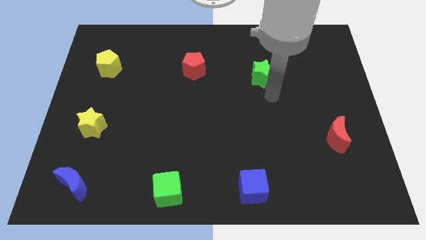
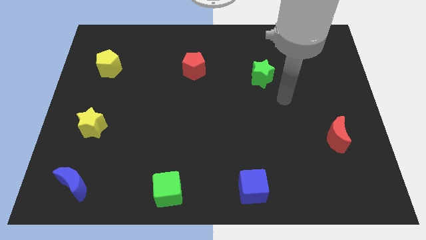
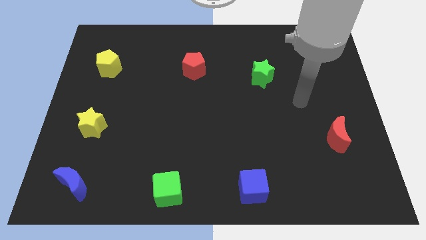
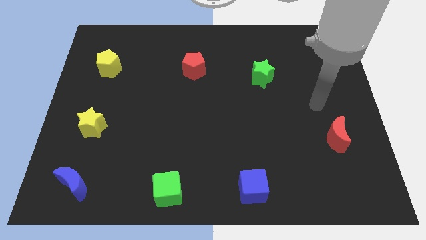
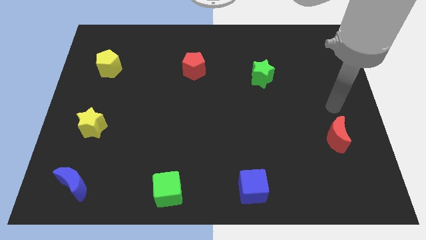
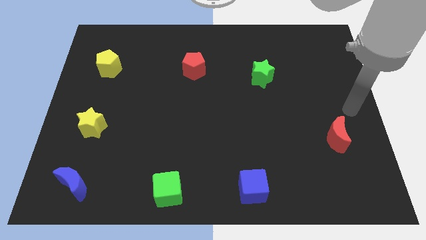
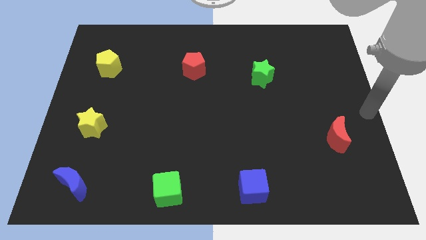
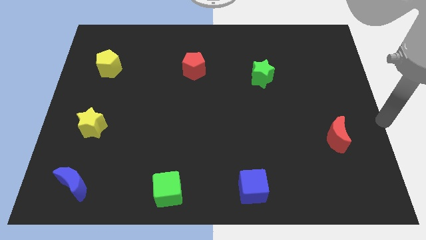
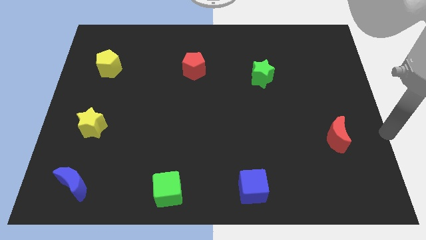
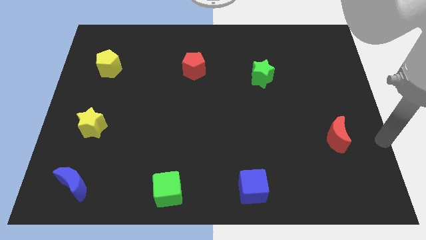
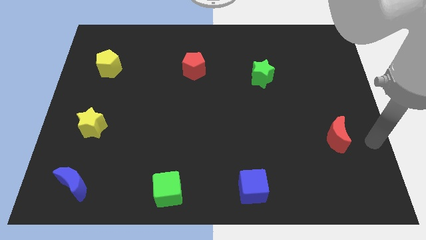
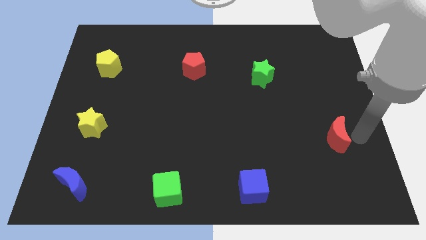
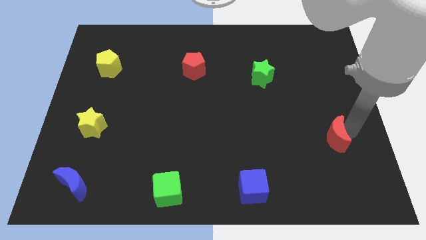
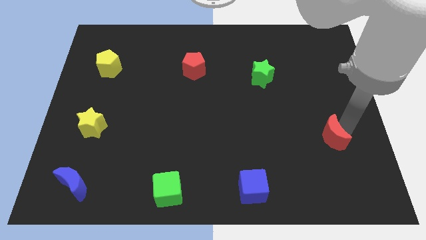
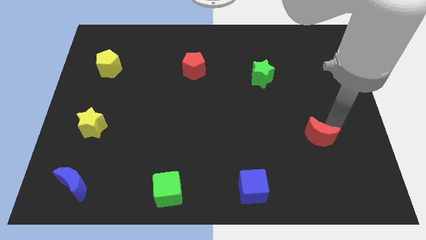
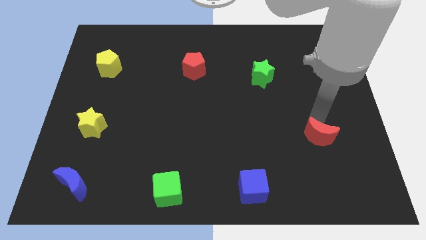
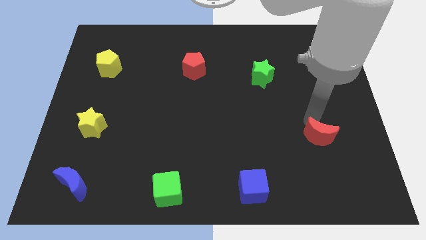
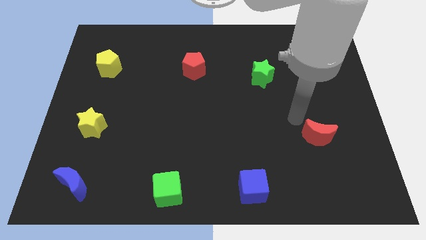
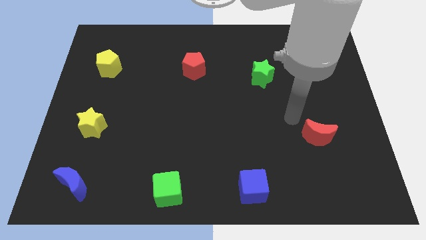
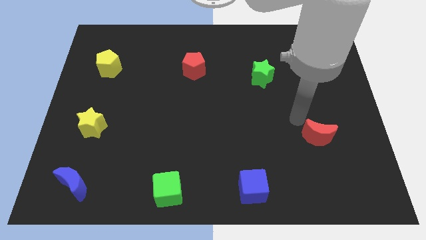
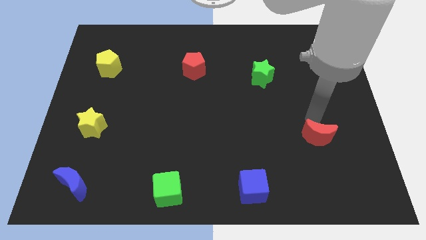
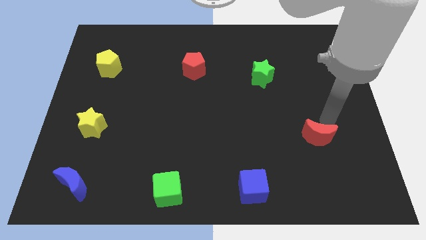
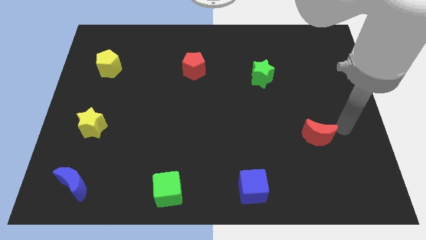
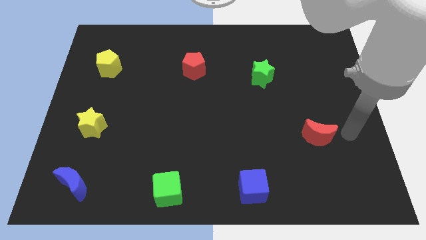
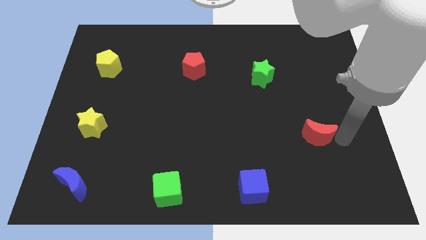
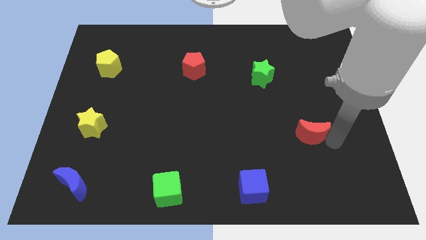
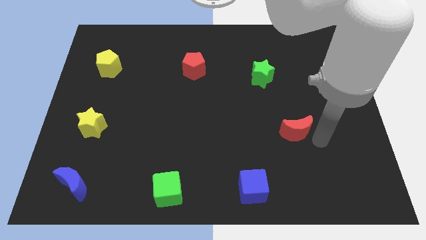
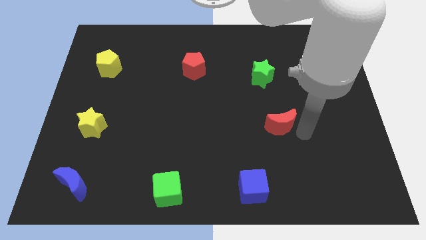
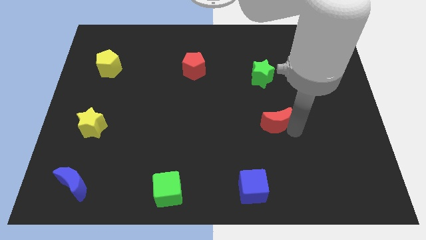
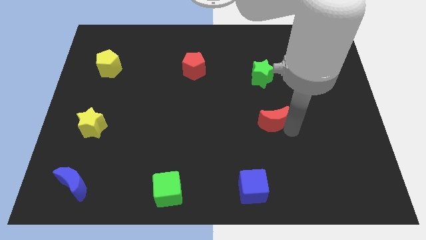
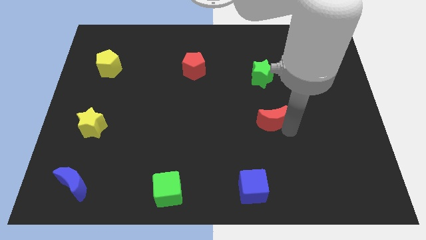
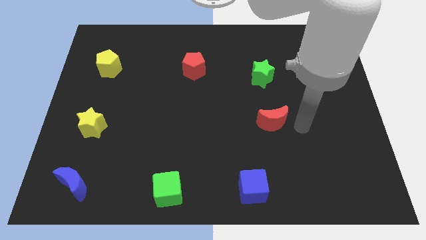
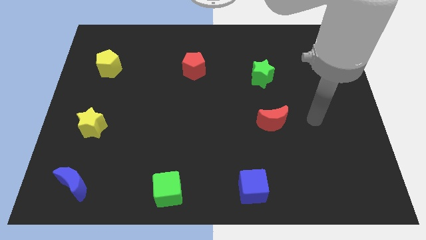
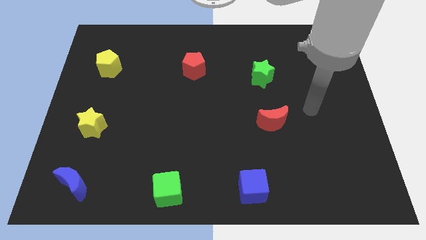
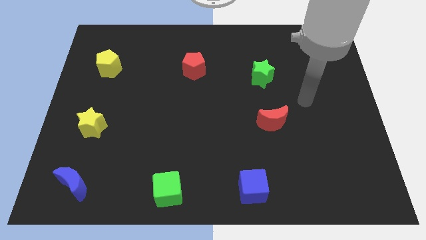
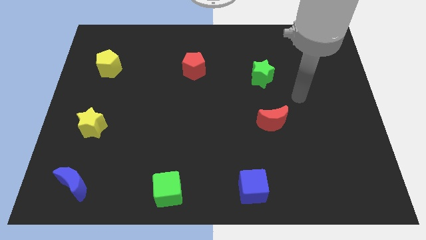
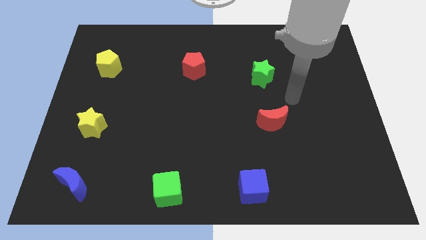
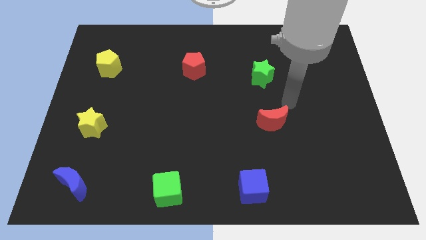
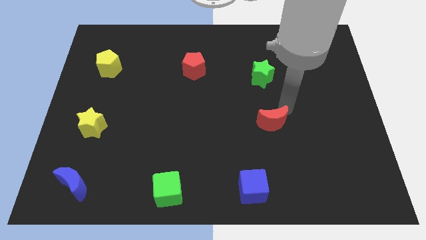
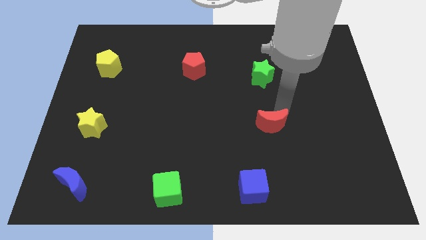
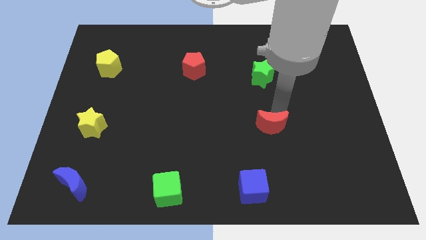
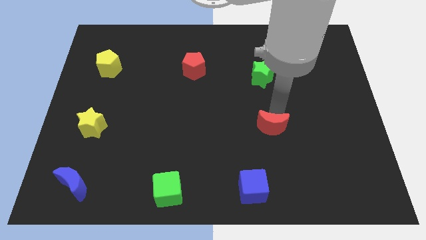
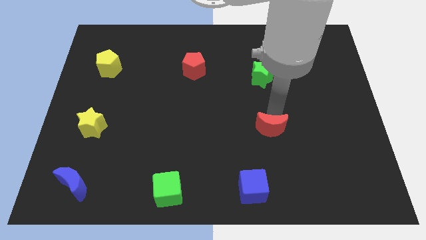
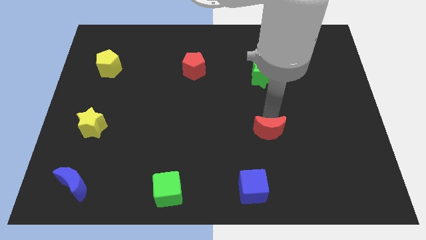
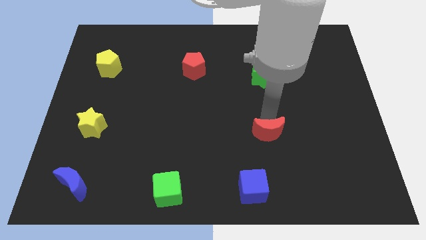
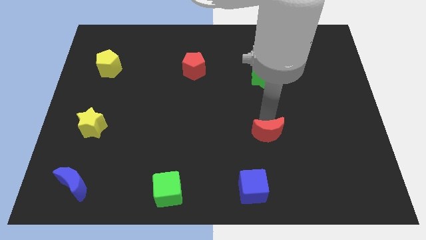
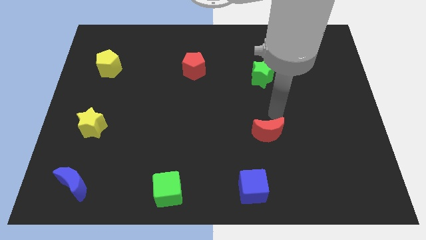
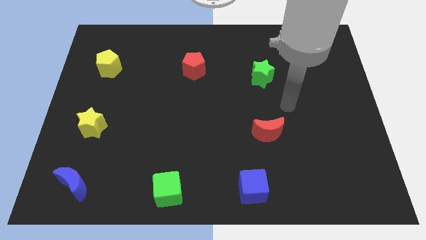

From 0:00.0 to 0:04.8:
place red moon below the green star vertically

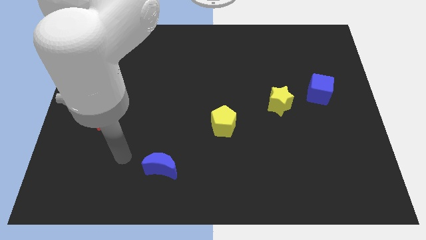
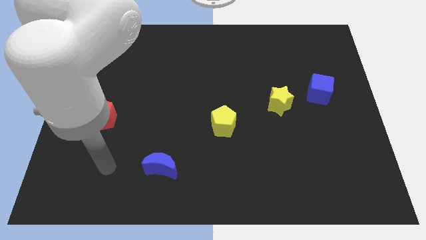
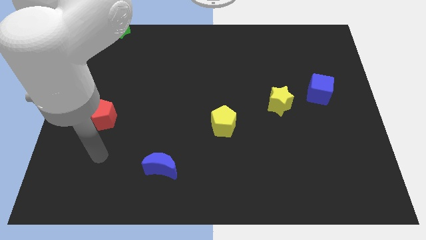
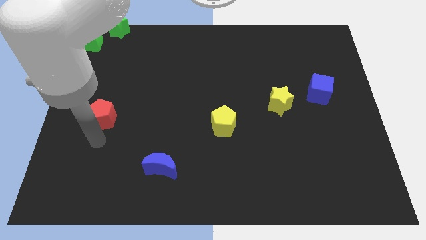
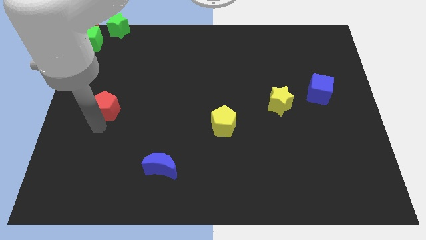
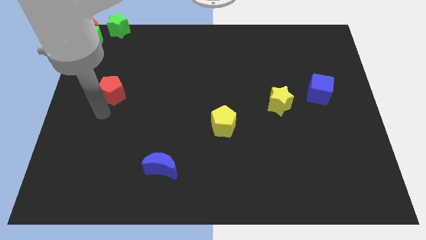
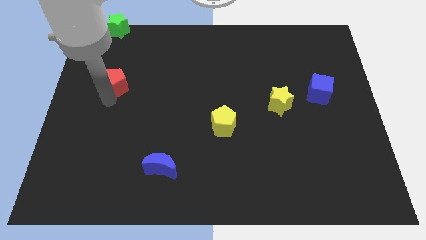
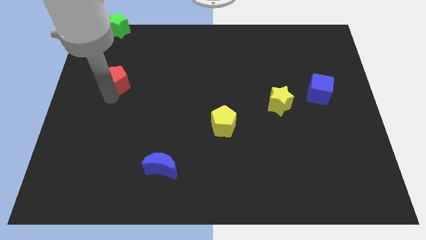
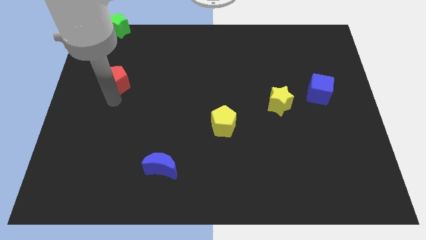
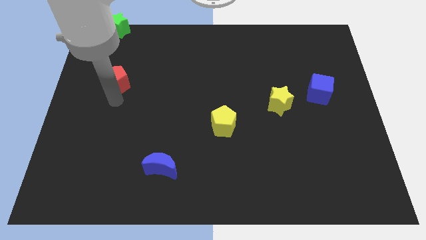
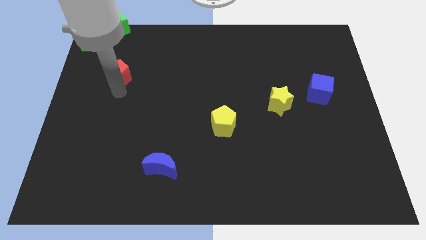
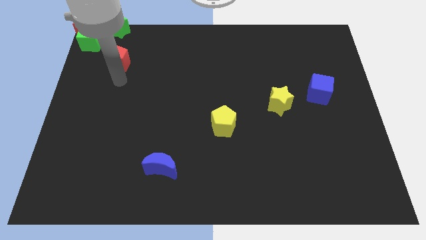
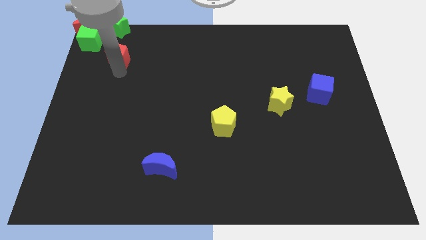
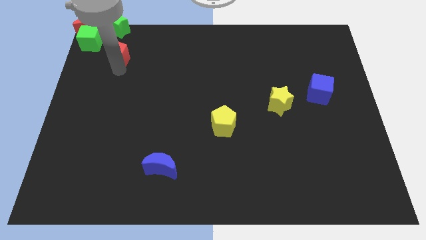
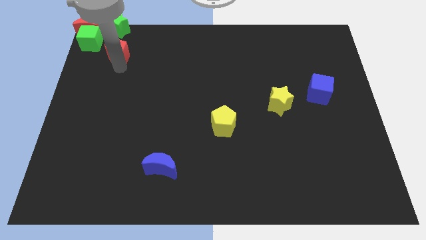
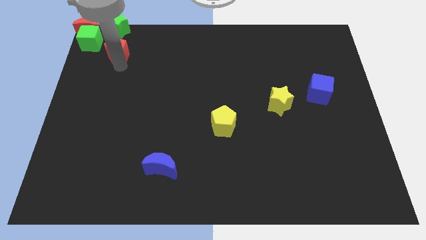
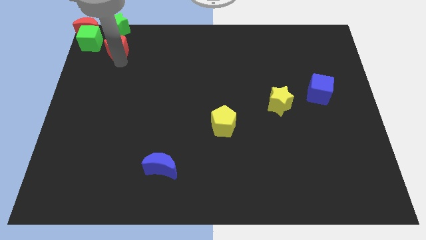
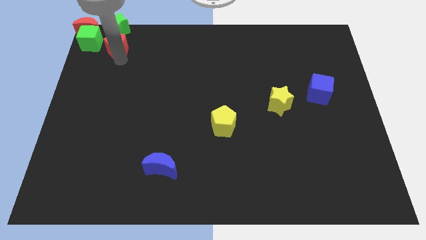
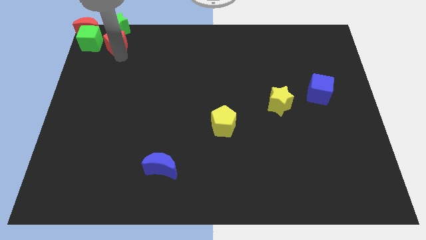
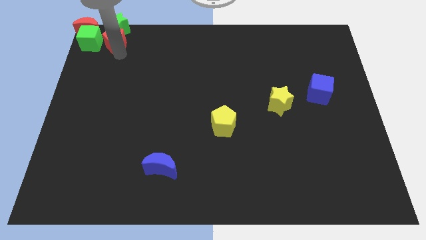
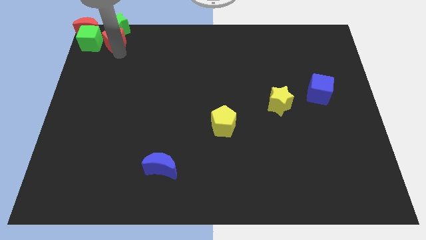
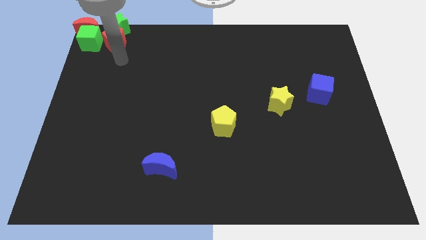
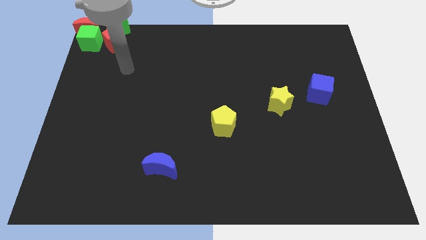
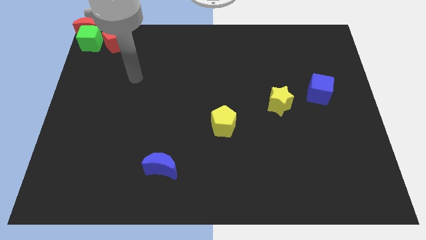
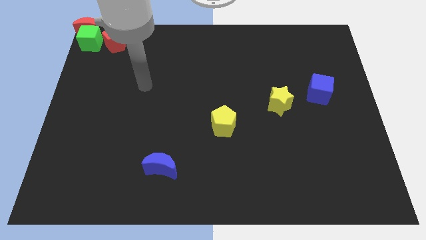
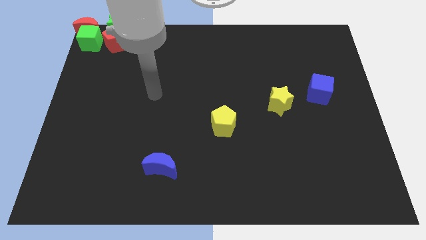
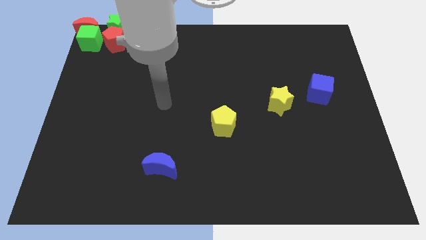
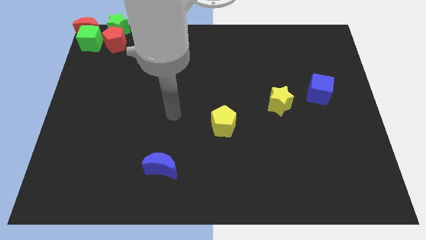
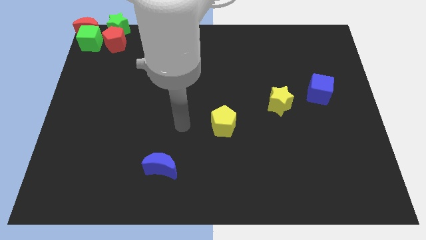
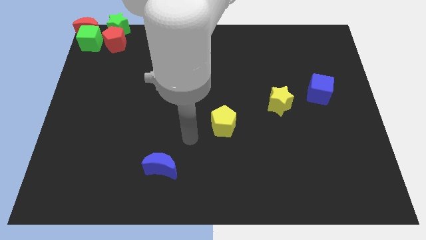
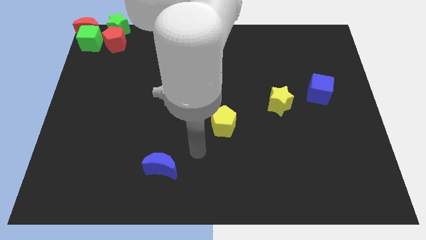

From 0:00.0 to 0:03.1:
put the red pentagon to the bottom side of the green star

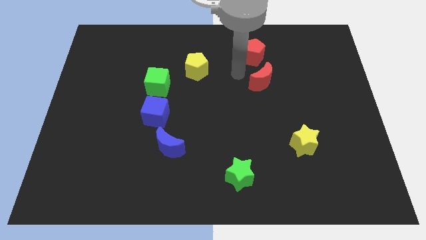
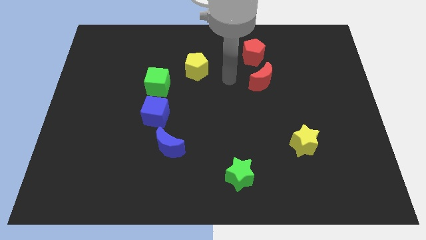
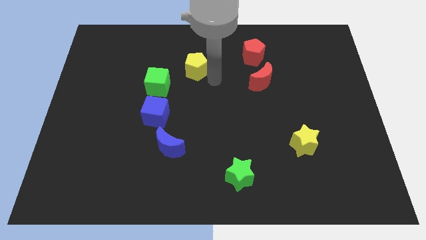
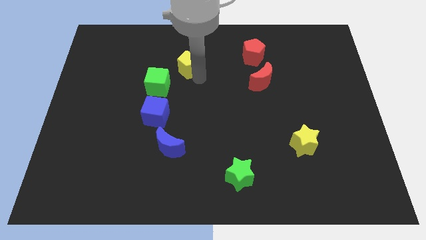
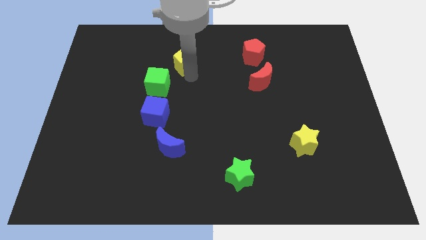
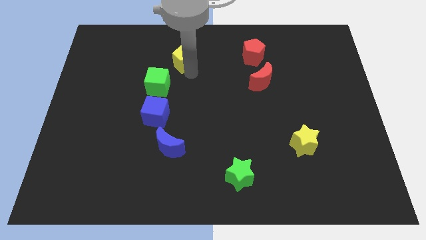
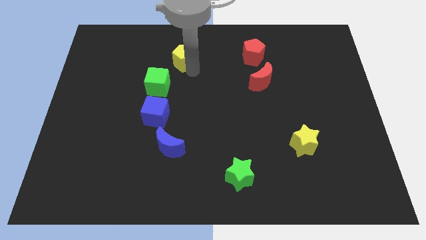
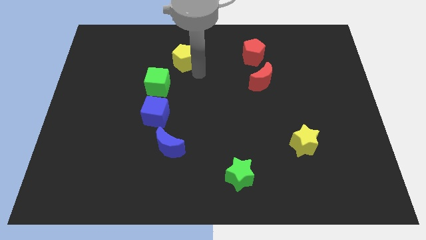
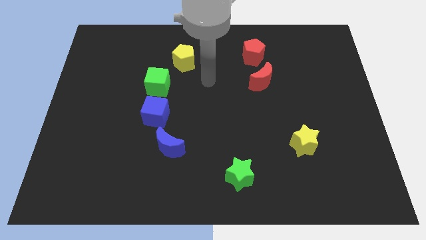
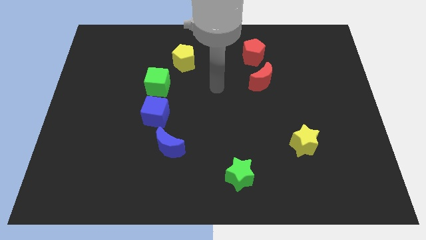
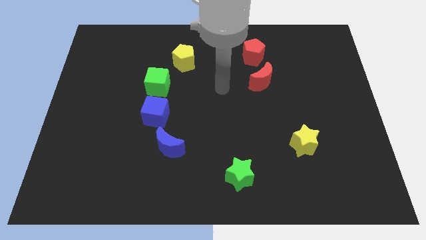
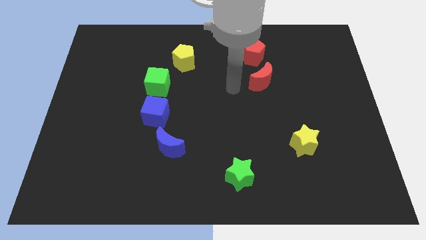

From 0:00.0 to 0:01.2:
slightly push the yellow pentagon towards the top left
